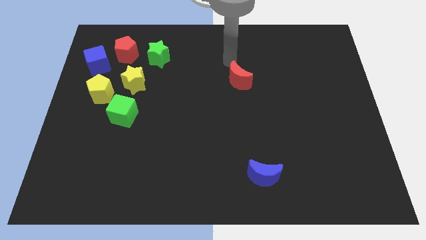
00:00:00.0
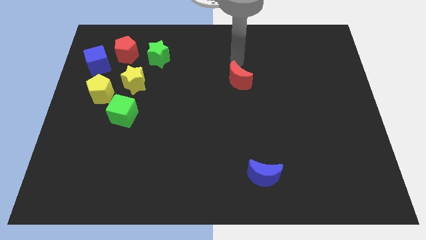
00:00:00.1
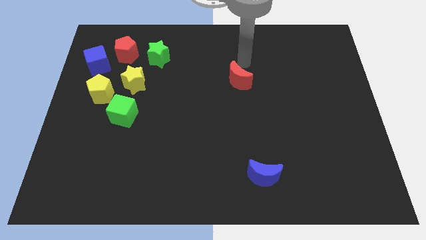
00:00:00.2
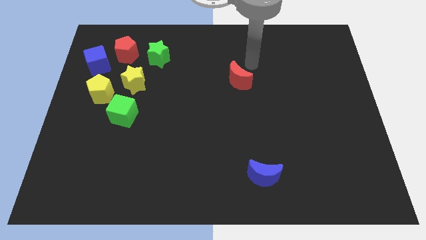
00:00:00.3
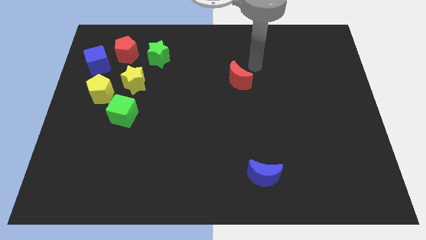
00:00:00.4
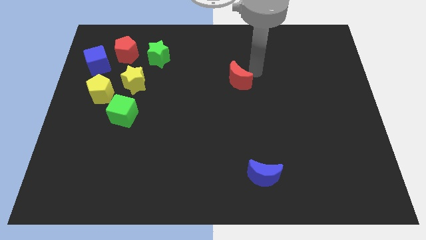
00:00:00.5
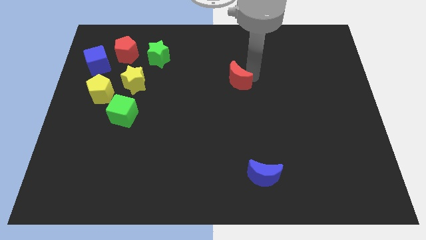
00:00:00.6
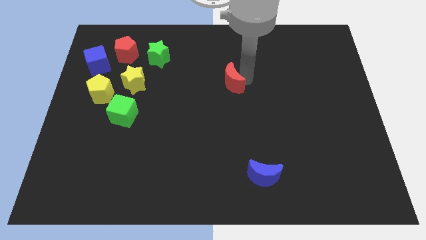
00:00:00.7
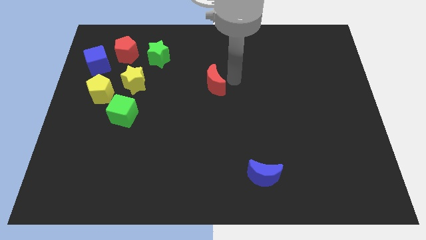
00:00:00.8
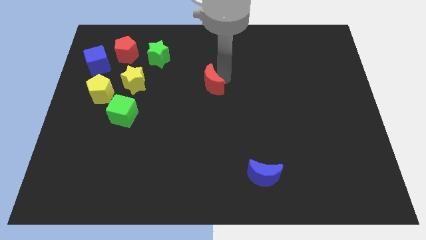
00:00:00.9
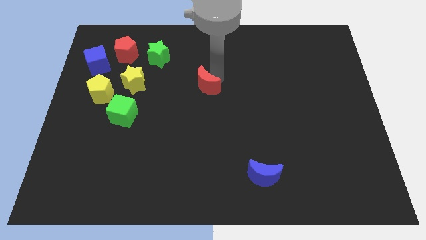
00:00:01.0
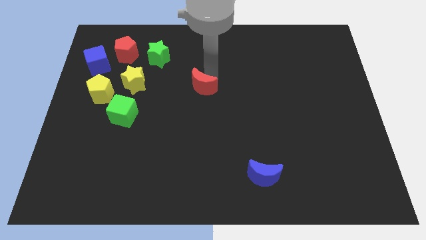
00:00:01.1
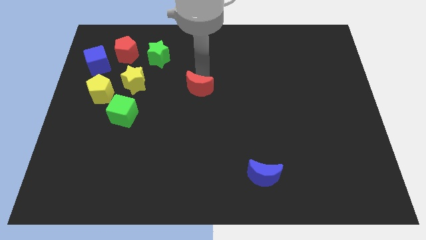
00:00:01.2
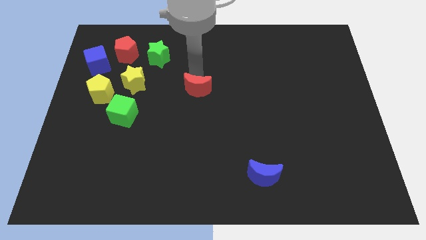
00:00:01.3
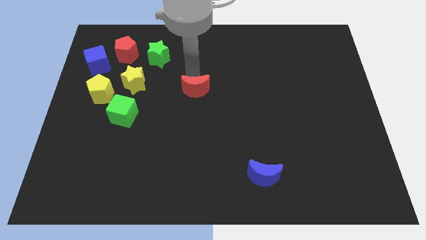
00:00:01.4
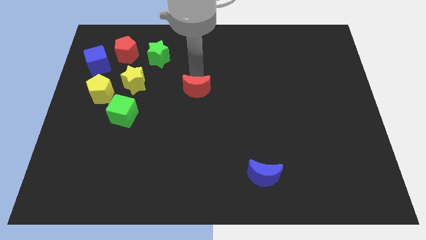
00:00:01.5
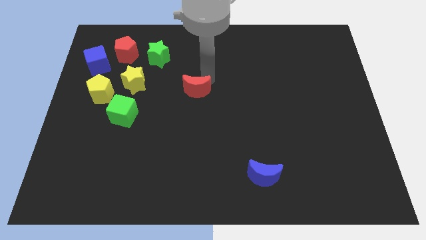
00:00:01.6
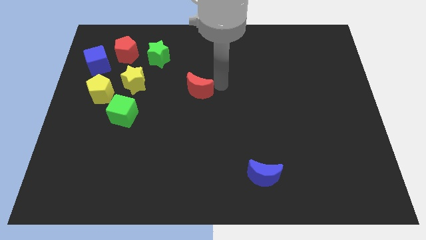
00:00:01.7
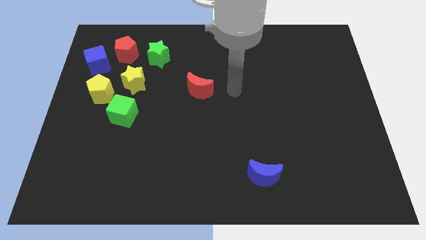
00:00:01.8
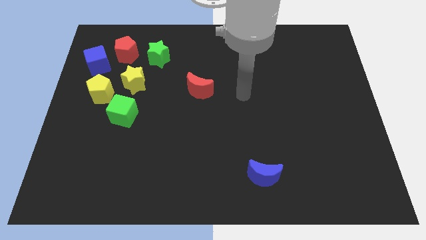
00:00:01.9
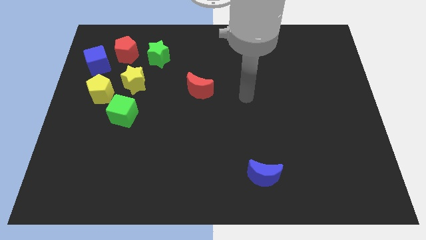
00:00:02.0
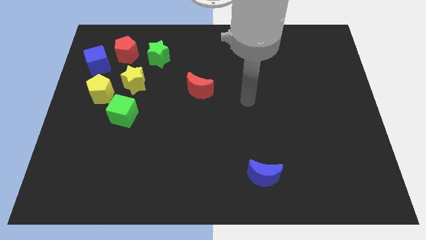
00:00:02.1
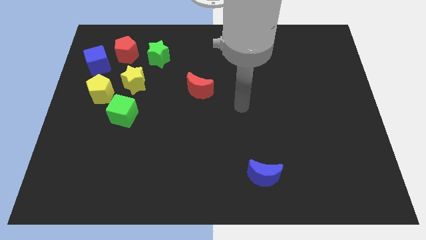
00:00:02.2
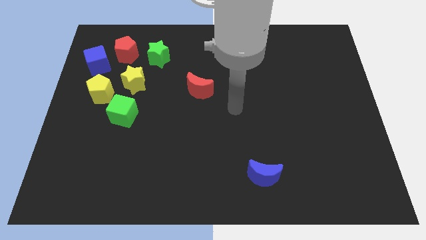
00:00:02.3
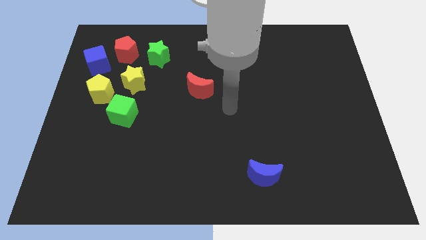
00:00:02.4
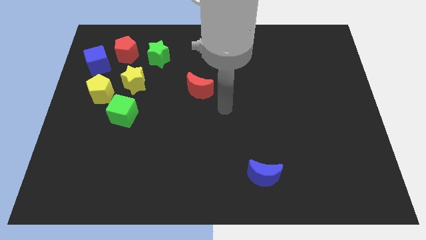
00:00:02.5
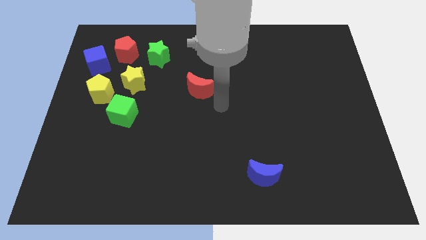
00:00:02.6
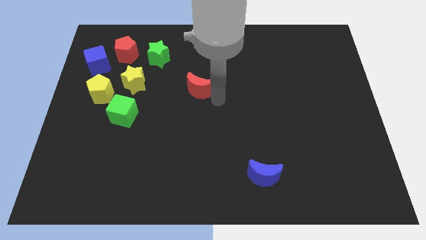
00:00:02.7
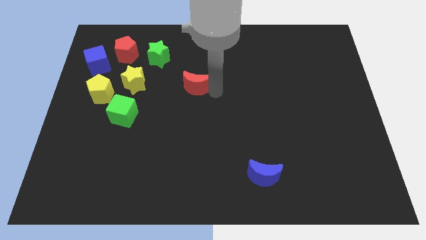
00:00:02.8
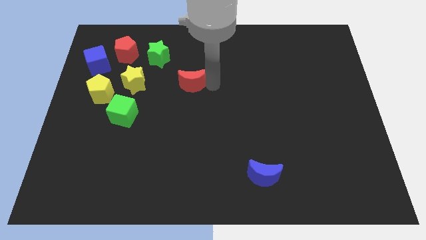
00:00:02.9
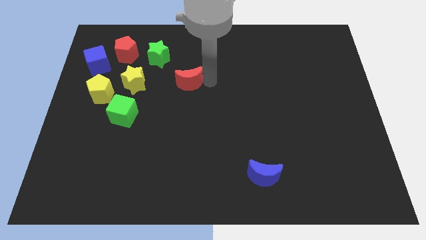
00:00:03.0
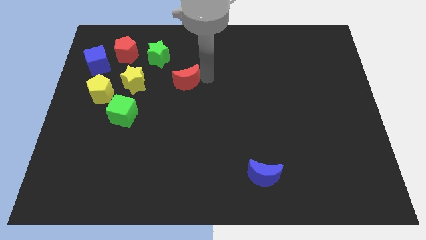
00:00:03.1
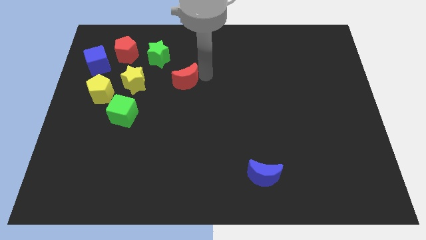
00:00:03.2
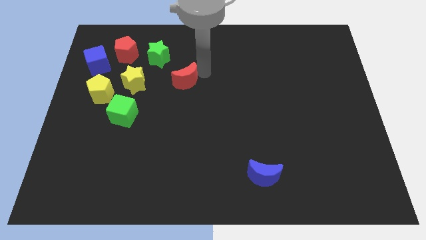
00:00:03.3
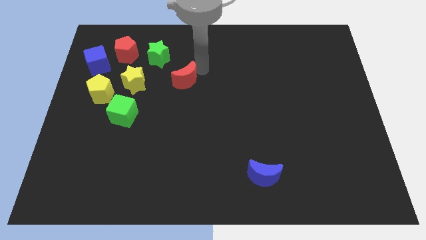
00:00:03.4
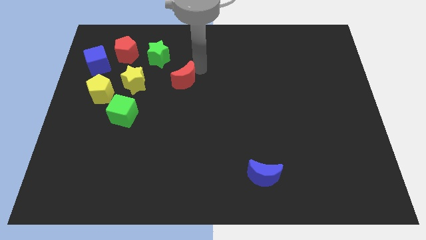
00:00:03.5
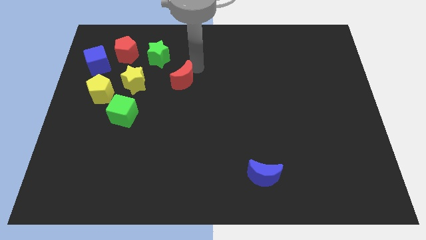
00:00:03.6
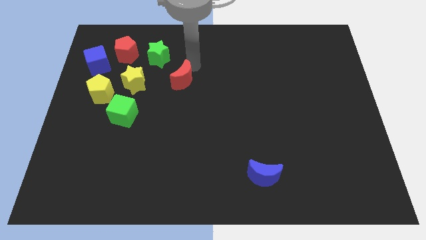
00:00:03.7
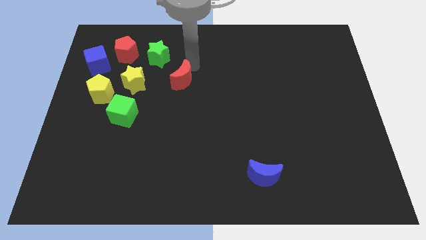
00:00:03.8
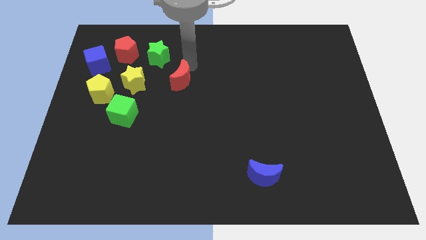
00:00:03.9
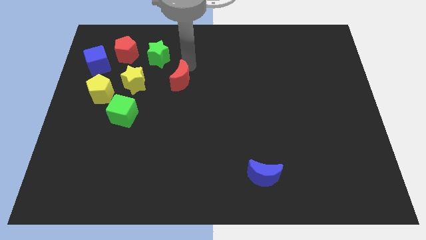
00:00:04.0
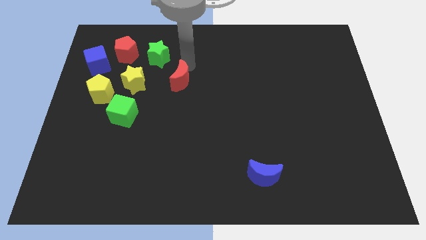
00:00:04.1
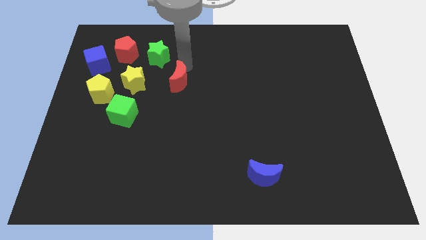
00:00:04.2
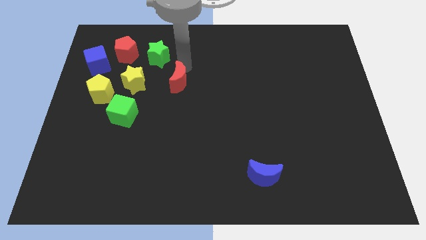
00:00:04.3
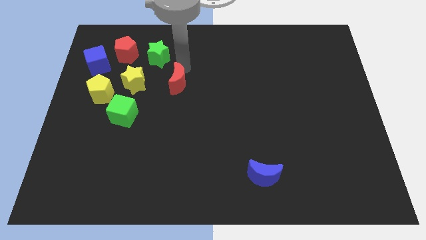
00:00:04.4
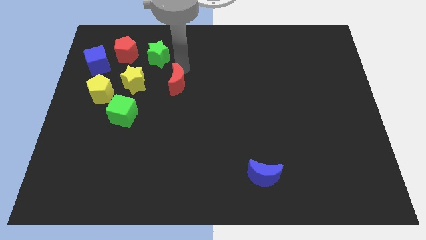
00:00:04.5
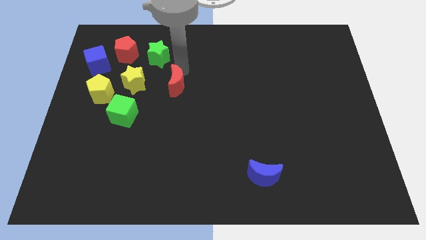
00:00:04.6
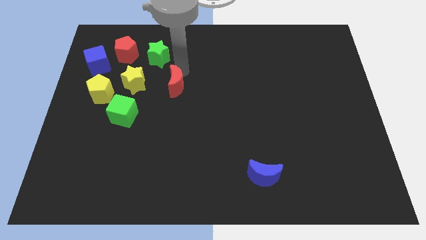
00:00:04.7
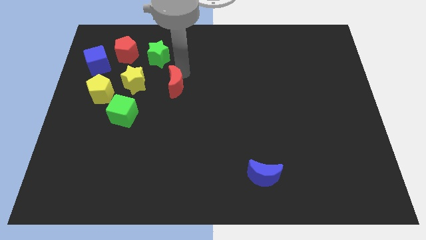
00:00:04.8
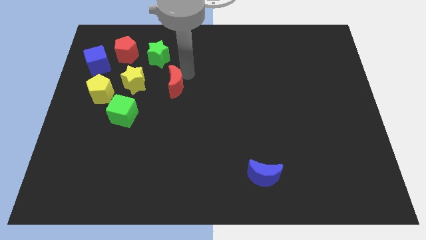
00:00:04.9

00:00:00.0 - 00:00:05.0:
push the red crescent to the right of the yellow star

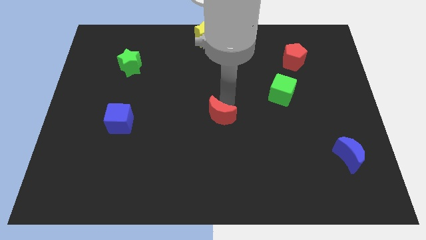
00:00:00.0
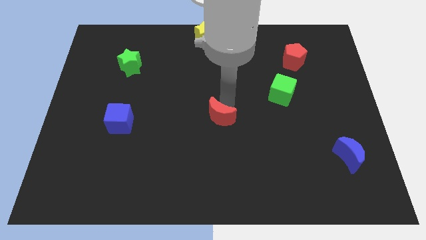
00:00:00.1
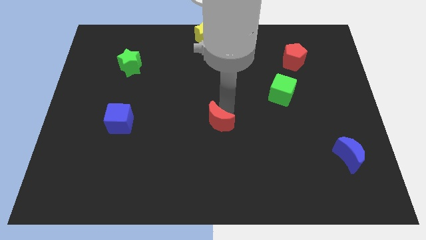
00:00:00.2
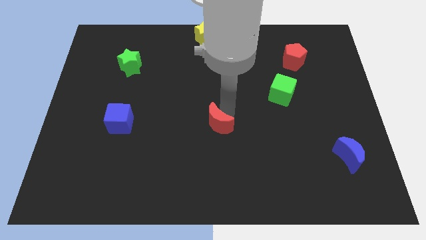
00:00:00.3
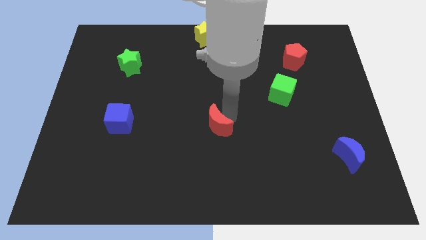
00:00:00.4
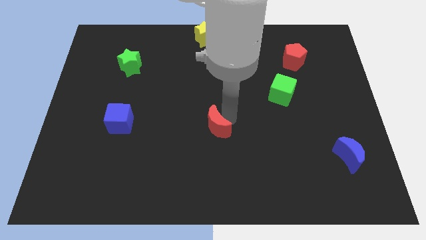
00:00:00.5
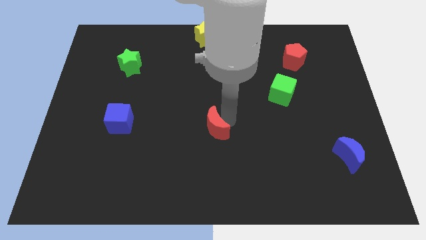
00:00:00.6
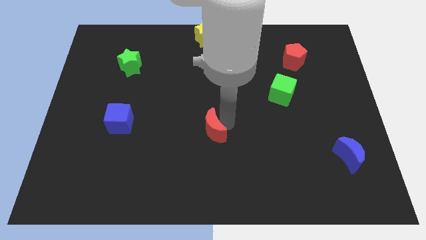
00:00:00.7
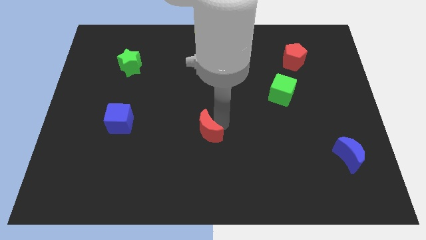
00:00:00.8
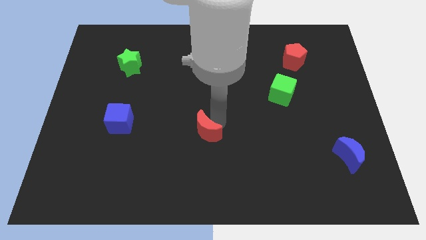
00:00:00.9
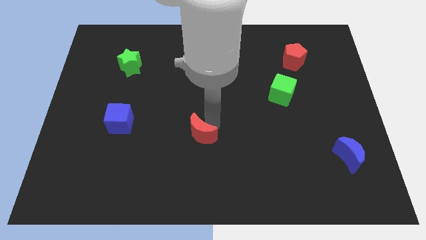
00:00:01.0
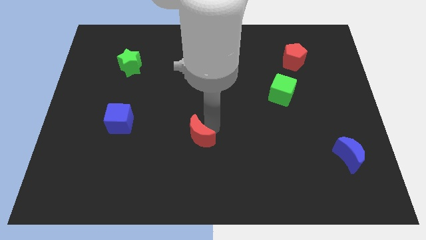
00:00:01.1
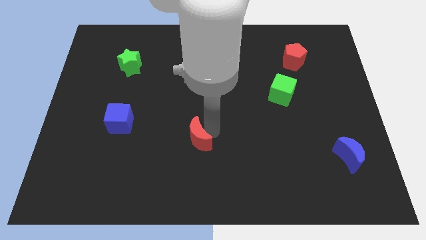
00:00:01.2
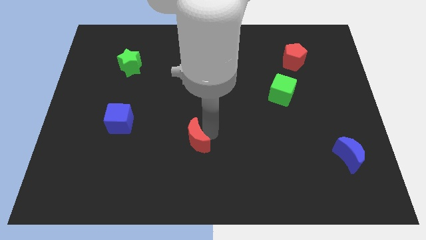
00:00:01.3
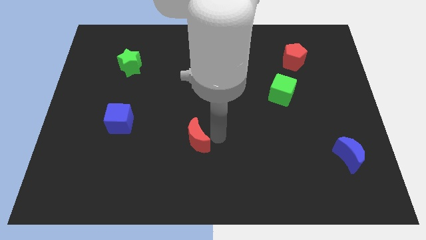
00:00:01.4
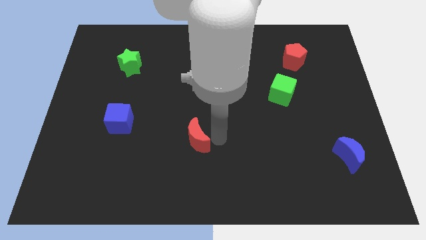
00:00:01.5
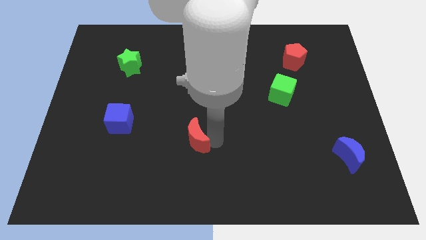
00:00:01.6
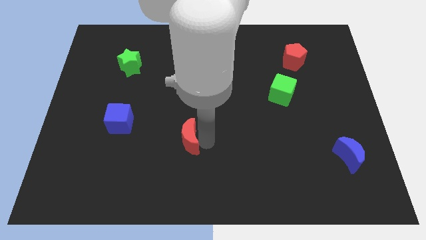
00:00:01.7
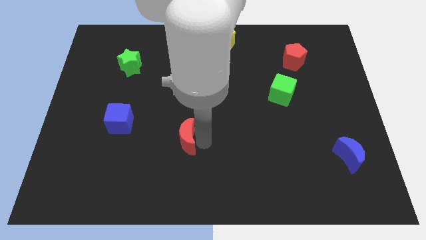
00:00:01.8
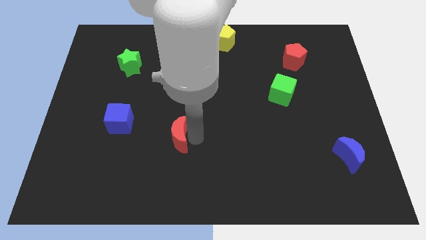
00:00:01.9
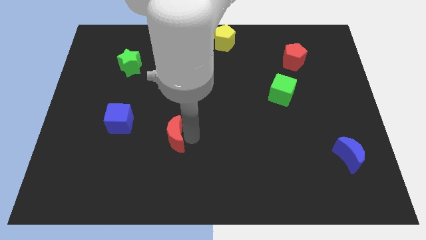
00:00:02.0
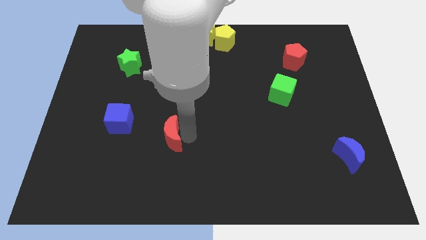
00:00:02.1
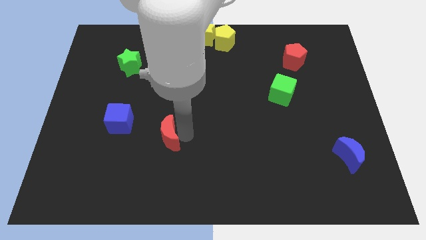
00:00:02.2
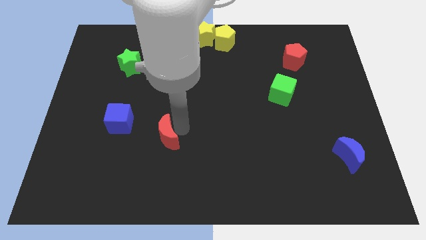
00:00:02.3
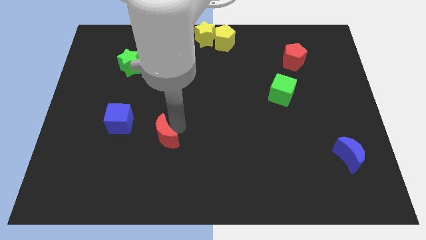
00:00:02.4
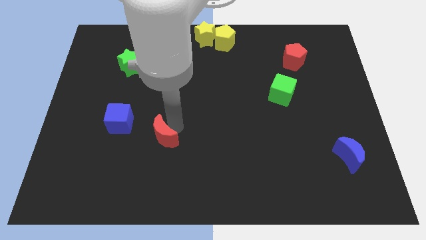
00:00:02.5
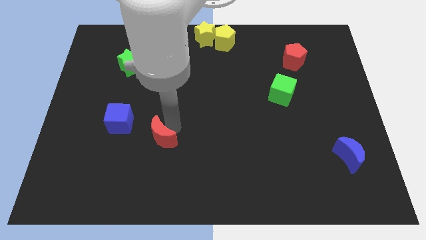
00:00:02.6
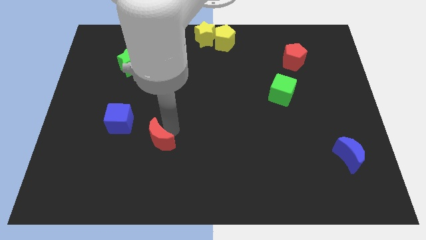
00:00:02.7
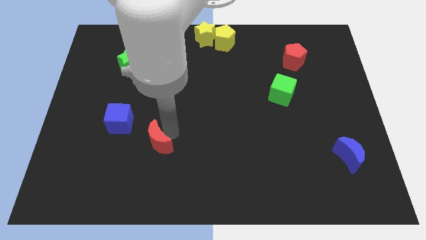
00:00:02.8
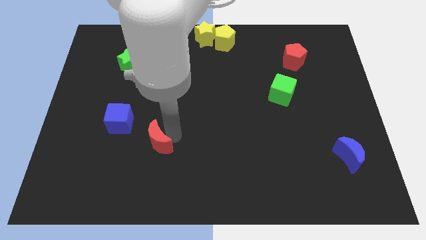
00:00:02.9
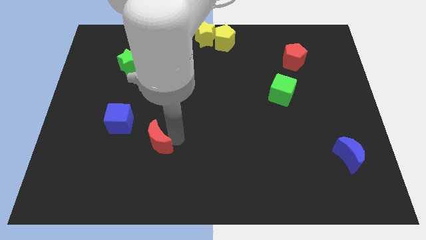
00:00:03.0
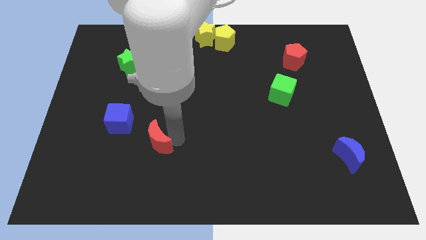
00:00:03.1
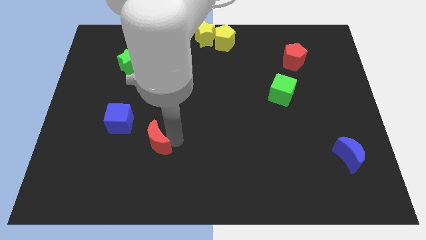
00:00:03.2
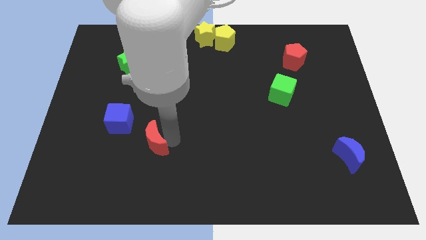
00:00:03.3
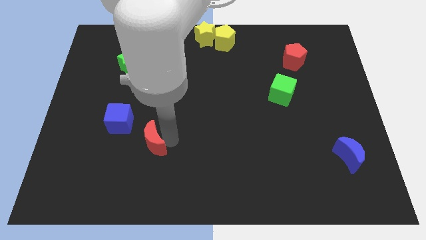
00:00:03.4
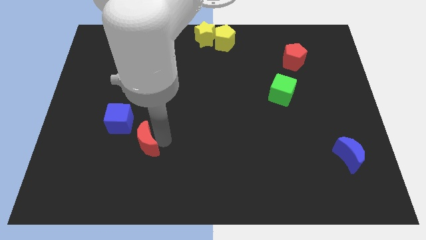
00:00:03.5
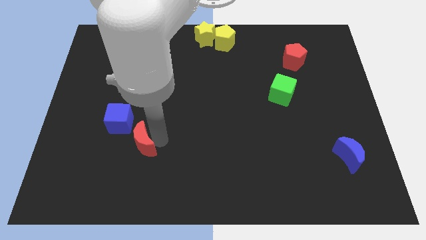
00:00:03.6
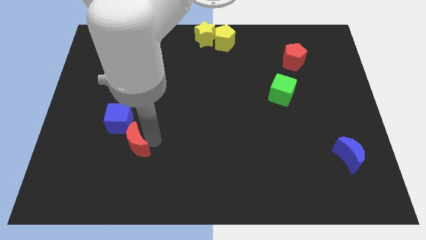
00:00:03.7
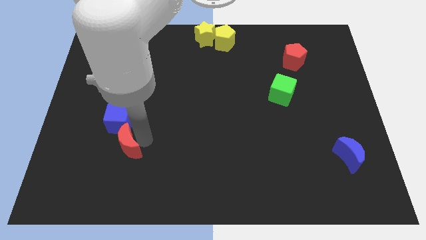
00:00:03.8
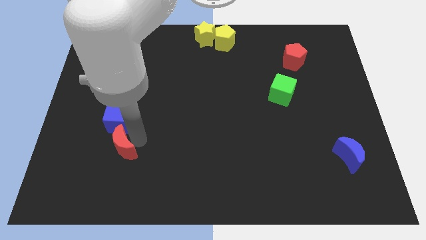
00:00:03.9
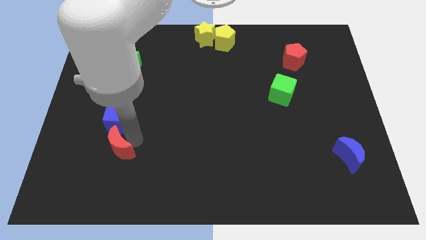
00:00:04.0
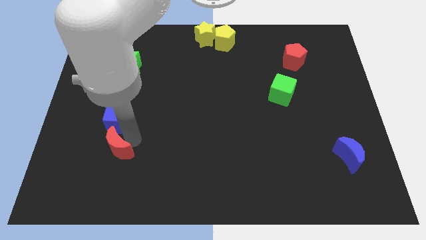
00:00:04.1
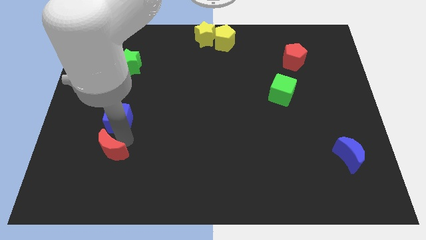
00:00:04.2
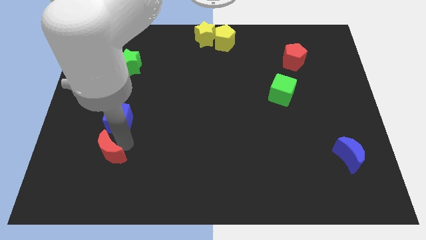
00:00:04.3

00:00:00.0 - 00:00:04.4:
place the red moon below the blue cube
